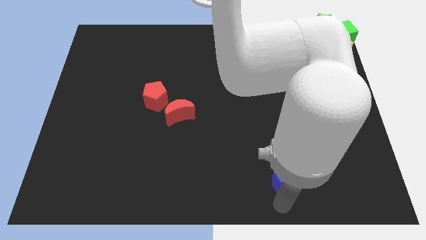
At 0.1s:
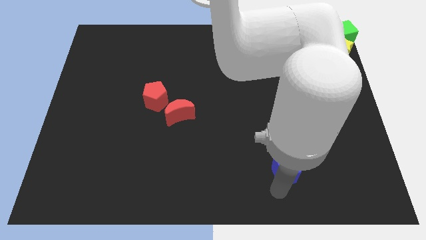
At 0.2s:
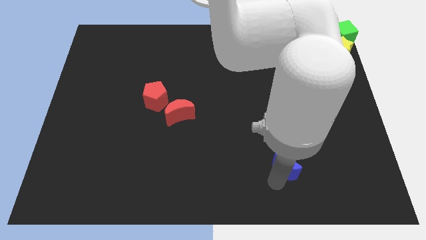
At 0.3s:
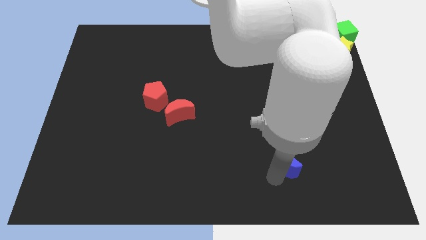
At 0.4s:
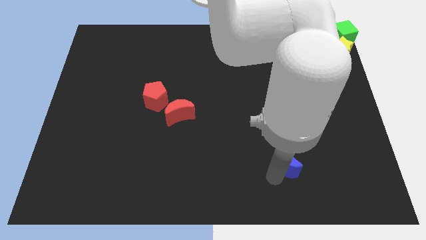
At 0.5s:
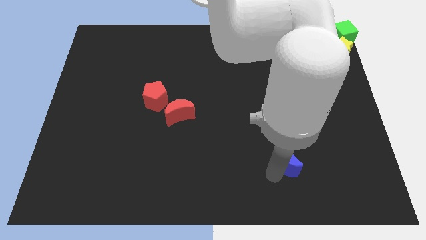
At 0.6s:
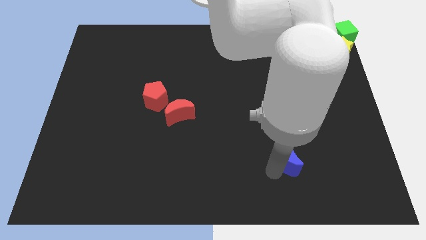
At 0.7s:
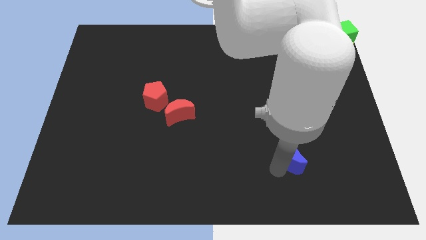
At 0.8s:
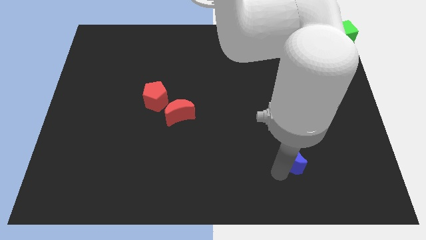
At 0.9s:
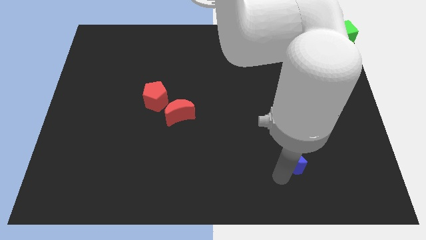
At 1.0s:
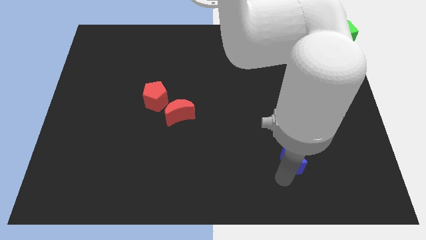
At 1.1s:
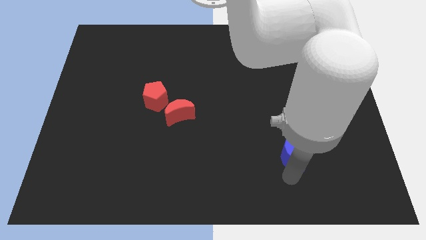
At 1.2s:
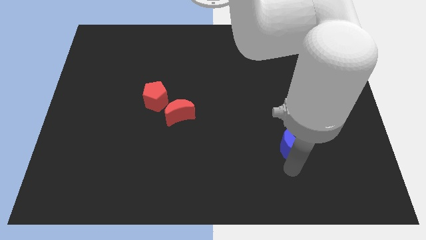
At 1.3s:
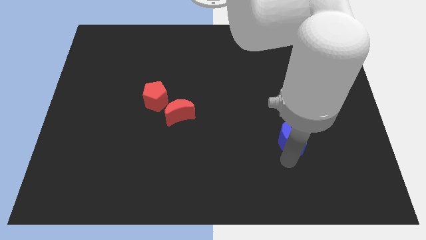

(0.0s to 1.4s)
move the blue crescent to the top of the board

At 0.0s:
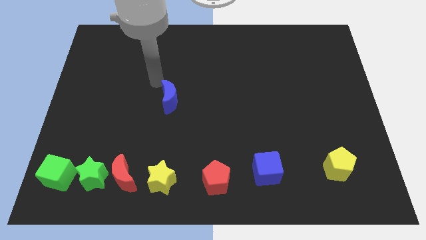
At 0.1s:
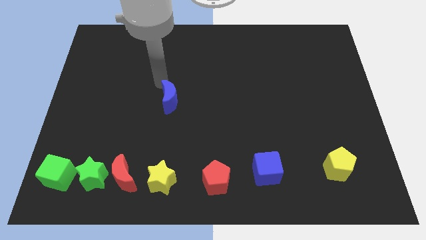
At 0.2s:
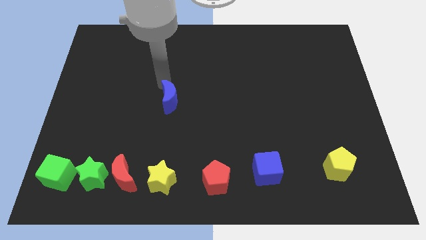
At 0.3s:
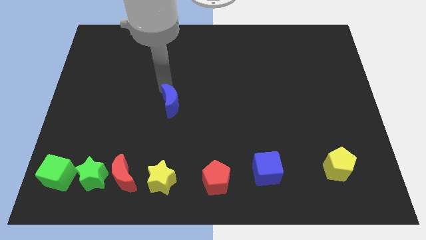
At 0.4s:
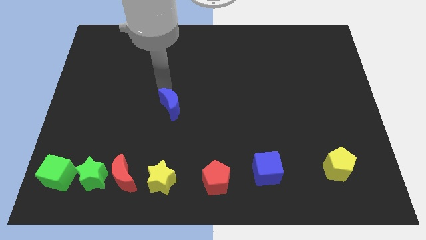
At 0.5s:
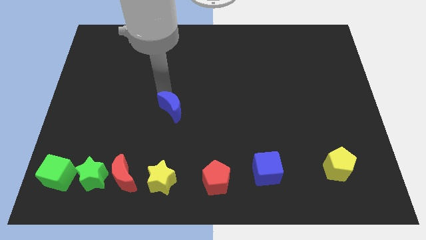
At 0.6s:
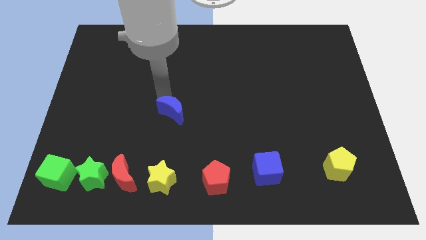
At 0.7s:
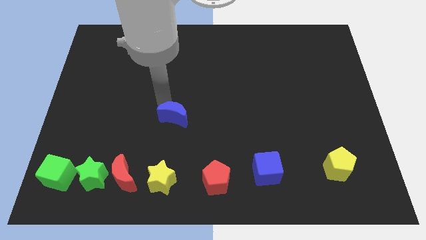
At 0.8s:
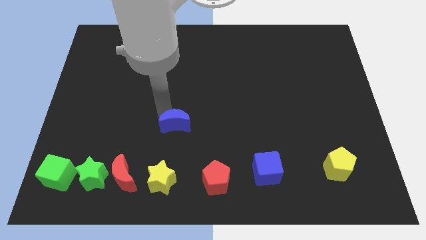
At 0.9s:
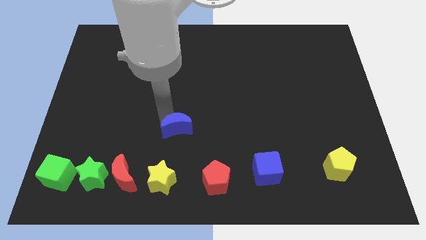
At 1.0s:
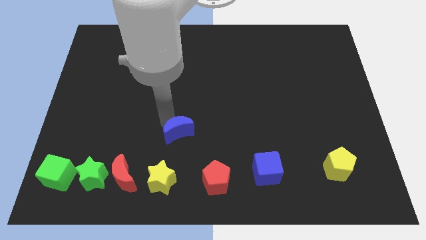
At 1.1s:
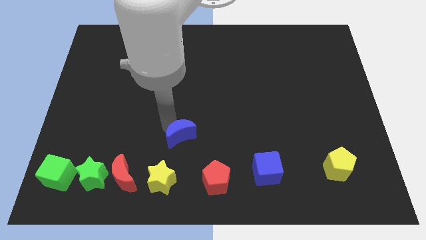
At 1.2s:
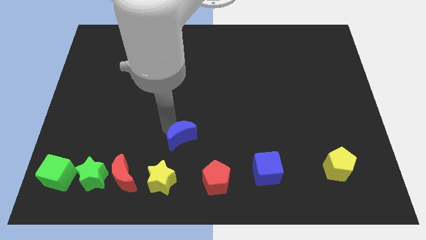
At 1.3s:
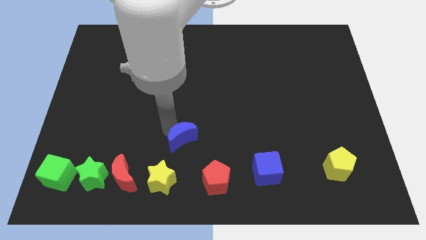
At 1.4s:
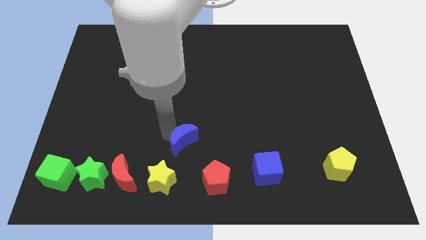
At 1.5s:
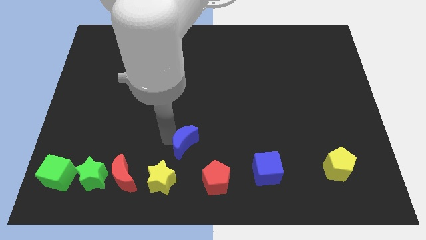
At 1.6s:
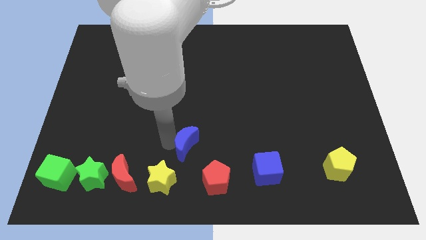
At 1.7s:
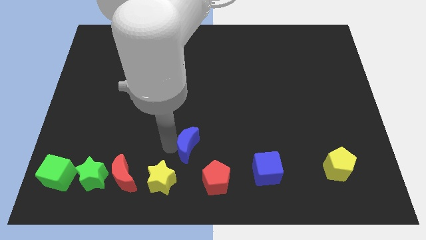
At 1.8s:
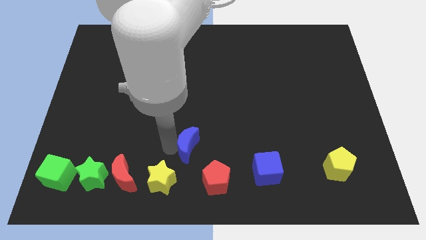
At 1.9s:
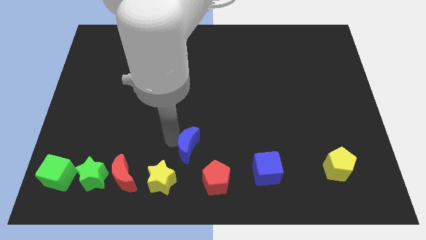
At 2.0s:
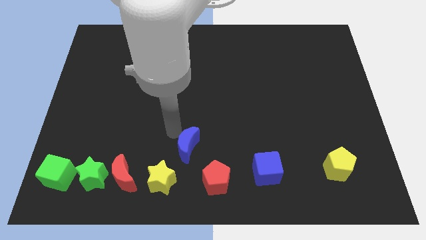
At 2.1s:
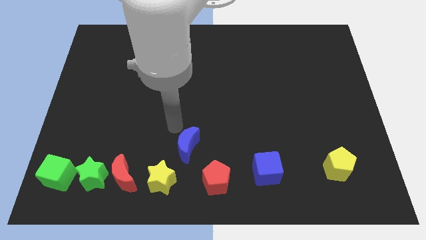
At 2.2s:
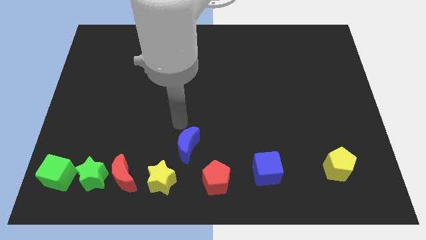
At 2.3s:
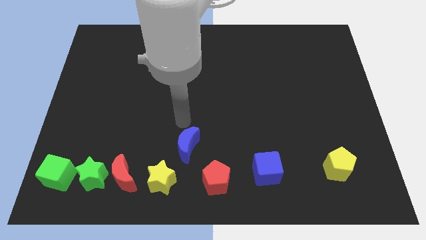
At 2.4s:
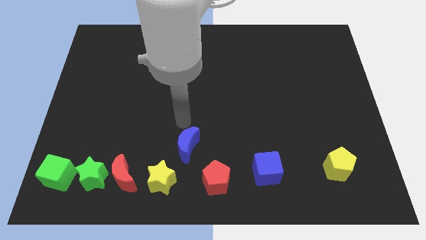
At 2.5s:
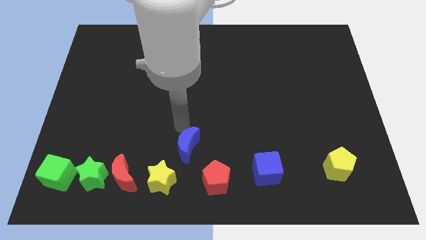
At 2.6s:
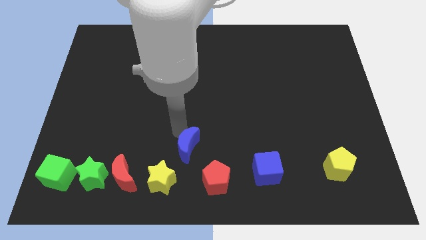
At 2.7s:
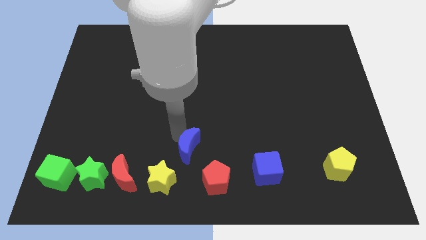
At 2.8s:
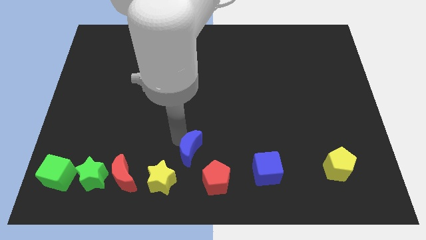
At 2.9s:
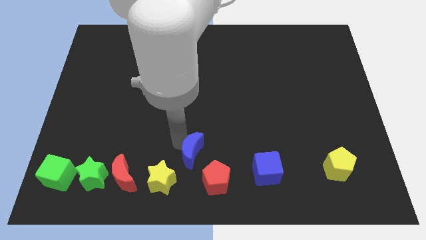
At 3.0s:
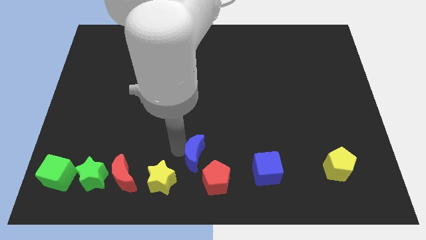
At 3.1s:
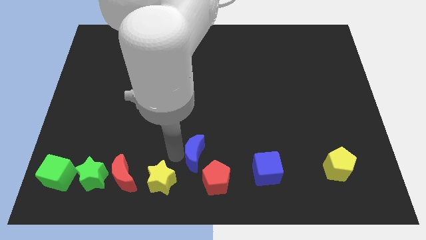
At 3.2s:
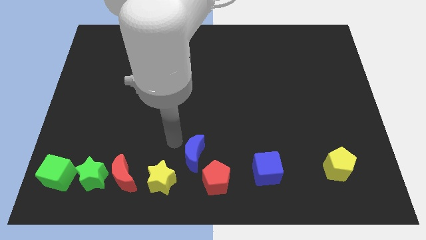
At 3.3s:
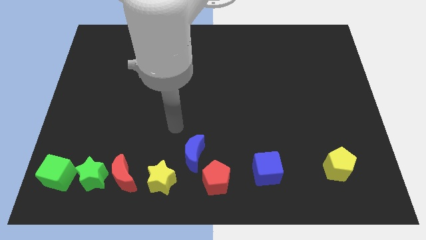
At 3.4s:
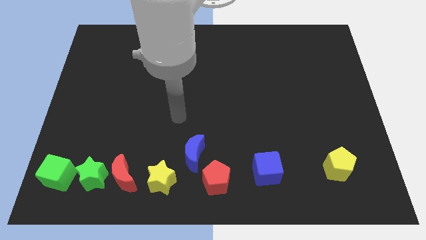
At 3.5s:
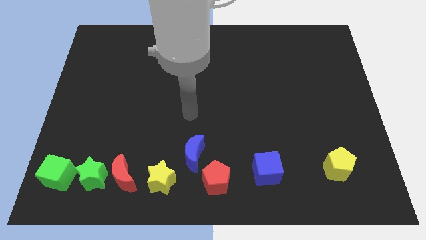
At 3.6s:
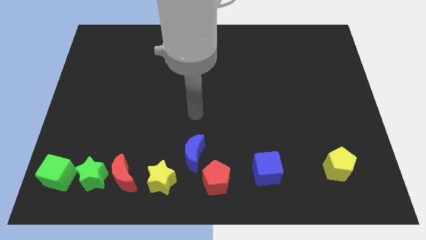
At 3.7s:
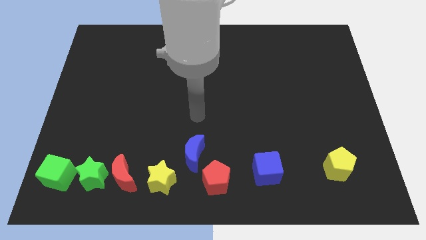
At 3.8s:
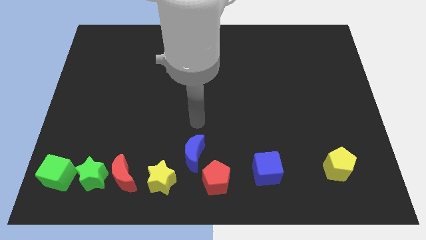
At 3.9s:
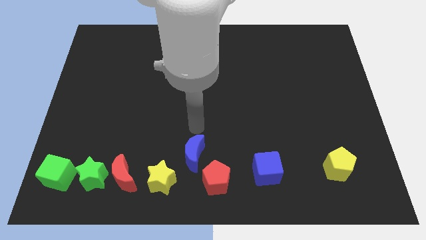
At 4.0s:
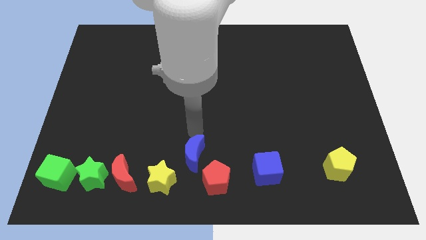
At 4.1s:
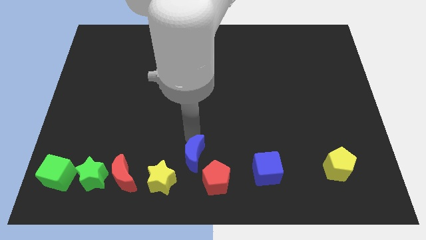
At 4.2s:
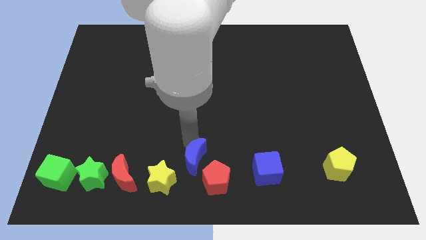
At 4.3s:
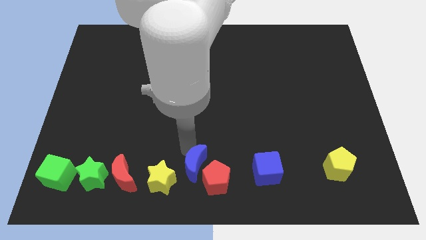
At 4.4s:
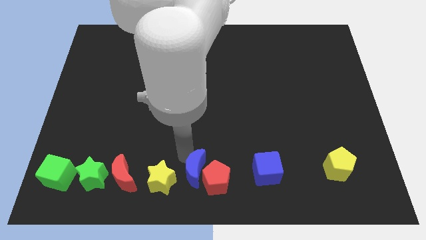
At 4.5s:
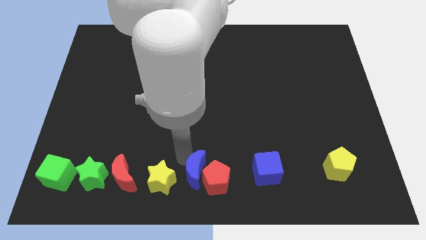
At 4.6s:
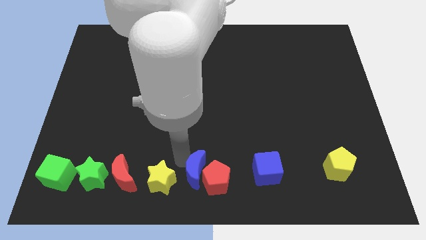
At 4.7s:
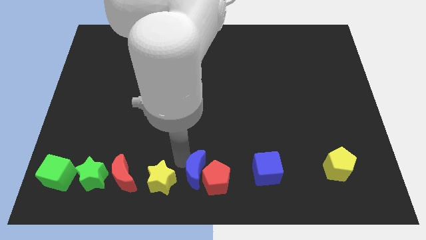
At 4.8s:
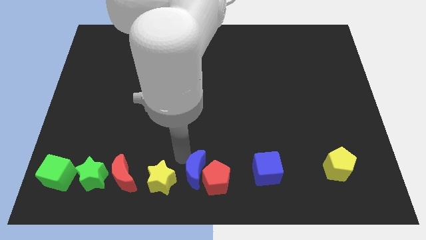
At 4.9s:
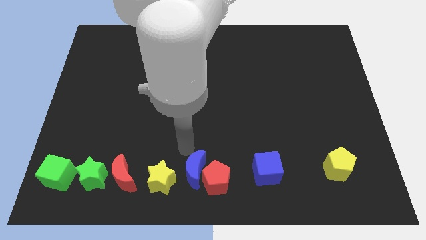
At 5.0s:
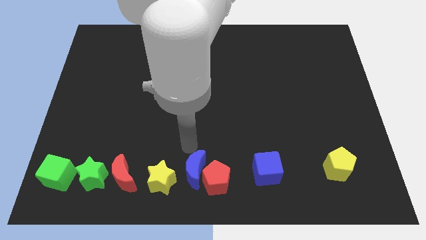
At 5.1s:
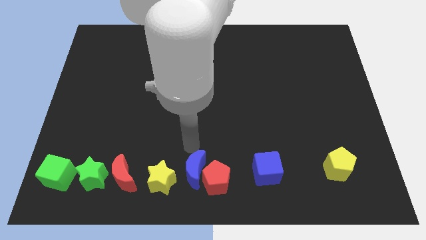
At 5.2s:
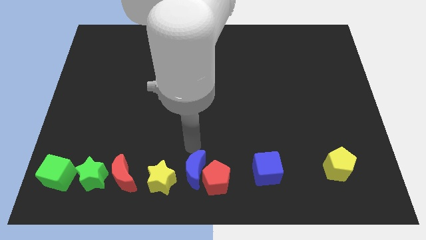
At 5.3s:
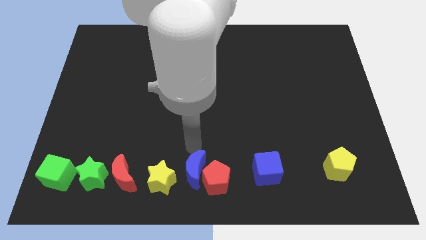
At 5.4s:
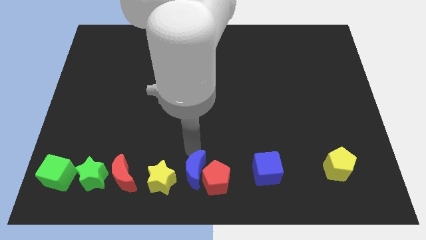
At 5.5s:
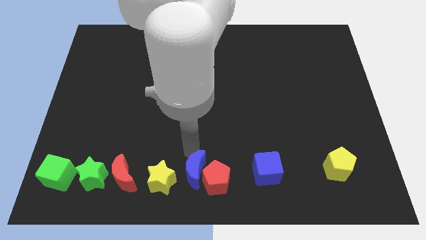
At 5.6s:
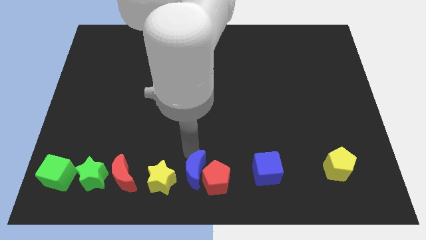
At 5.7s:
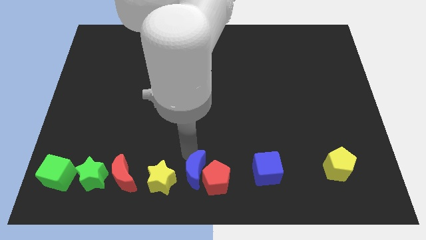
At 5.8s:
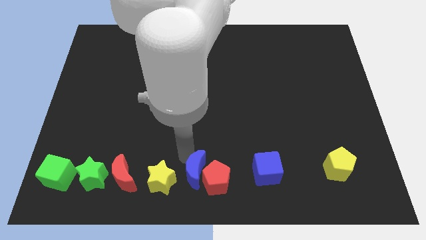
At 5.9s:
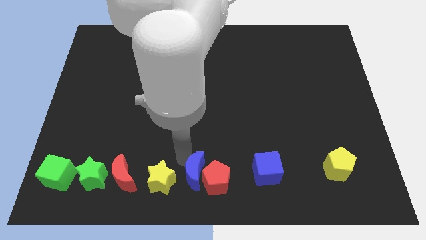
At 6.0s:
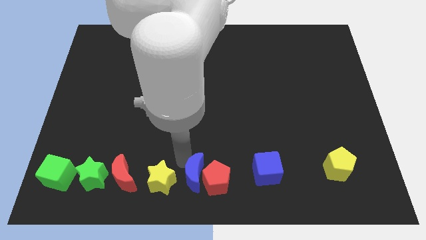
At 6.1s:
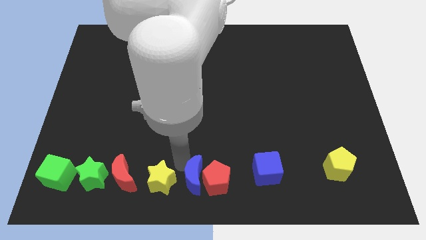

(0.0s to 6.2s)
place the blue moon in between the yellow star and red pentgaon

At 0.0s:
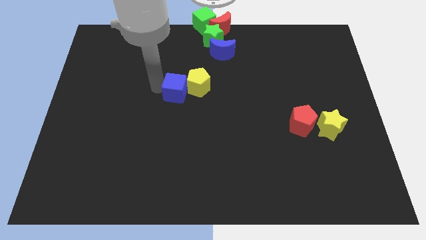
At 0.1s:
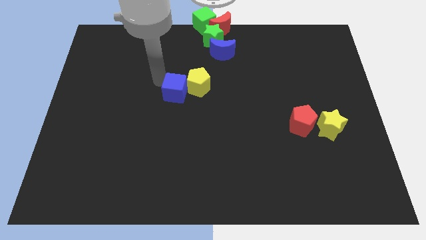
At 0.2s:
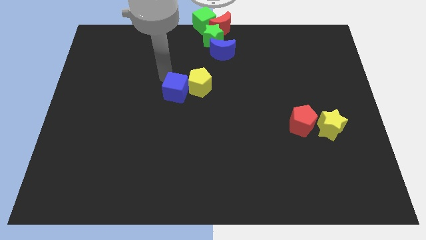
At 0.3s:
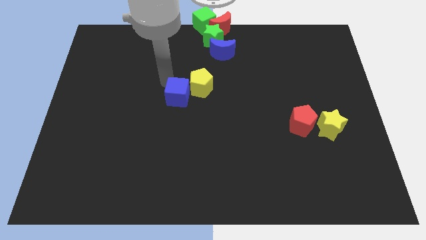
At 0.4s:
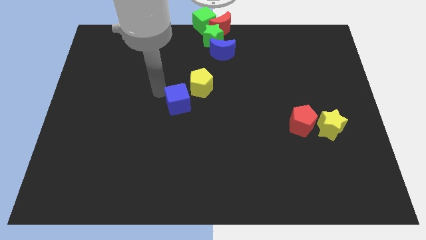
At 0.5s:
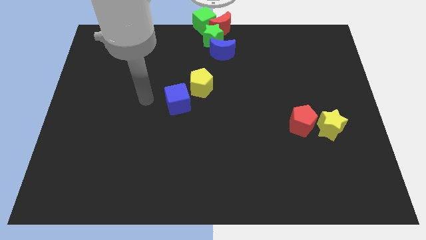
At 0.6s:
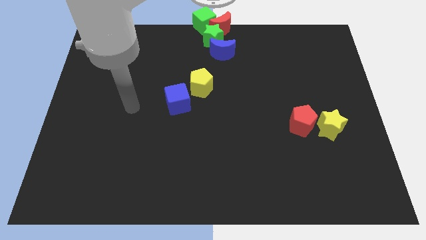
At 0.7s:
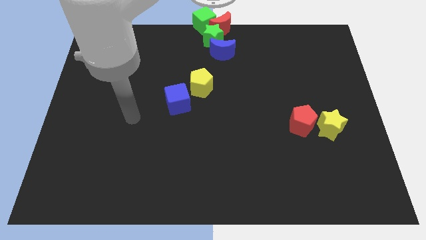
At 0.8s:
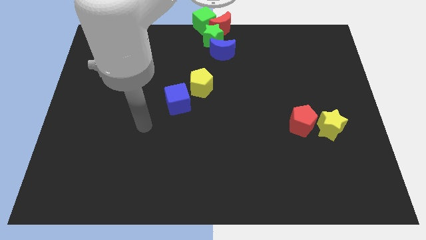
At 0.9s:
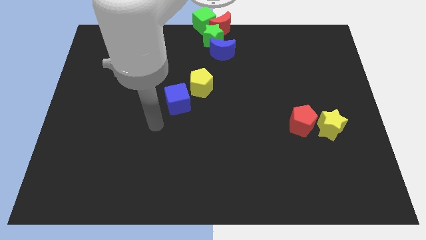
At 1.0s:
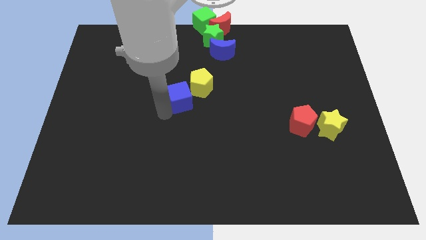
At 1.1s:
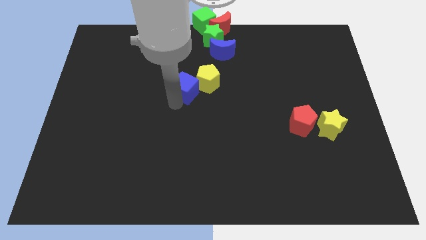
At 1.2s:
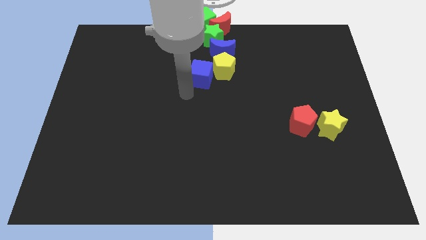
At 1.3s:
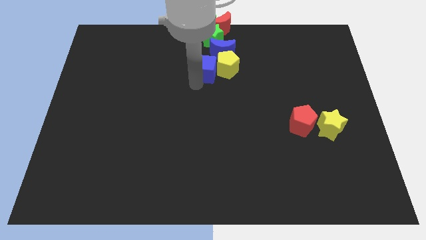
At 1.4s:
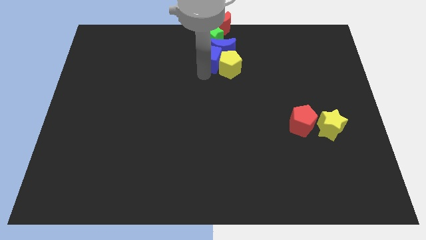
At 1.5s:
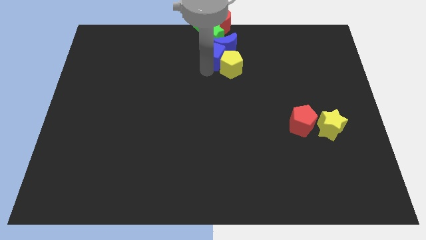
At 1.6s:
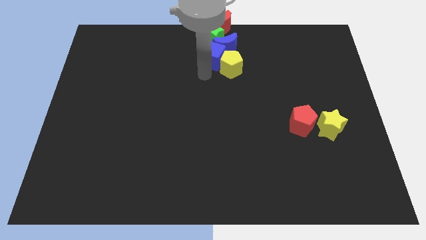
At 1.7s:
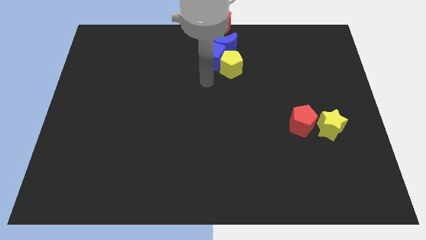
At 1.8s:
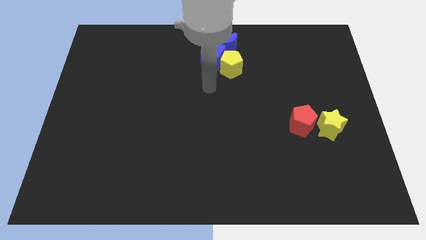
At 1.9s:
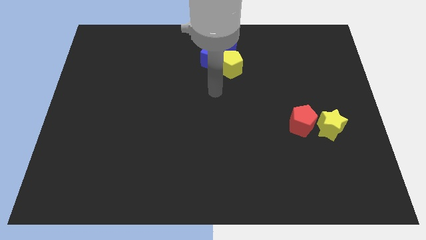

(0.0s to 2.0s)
push the blue cube along with the yellow pentagon into the blue moon
